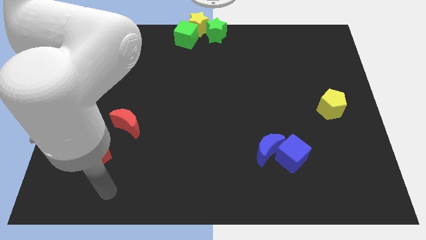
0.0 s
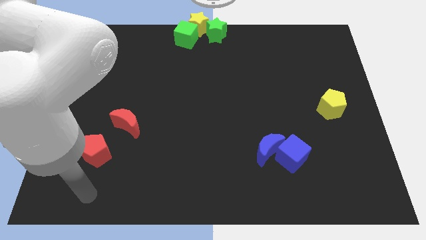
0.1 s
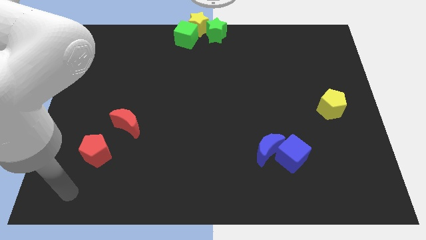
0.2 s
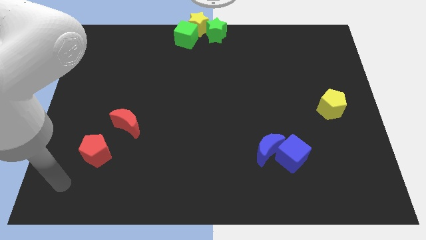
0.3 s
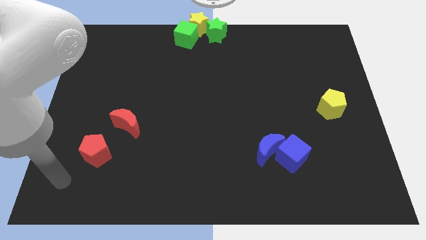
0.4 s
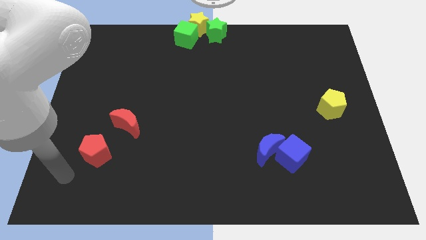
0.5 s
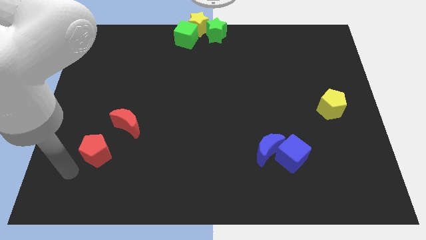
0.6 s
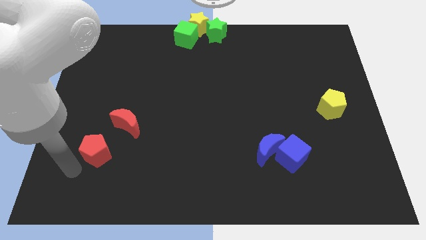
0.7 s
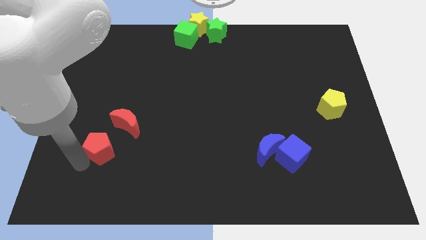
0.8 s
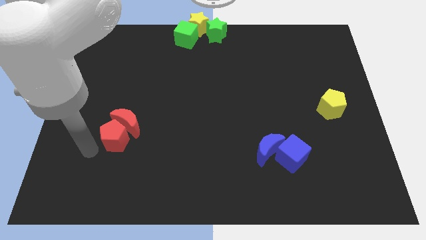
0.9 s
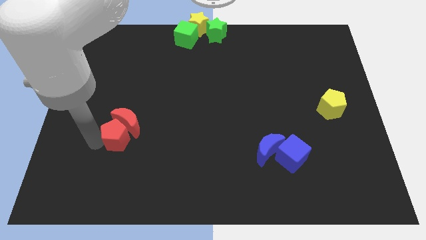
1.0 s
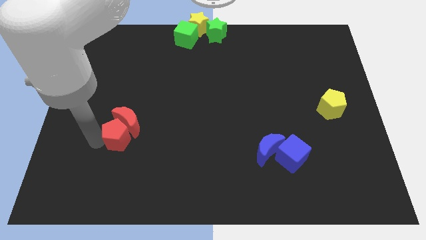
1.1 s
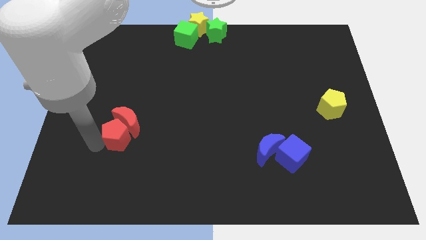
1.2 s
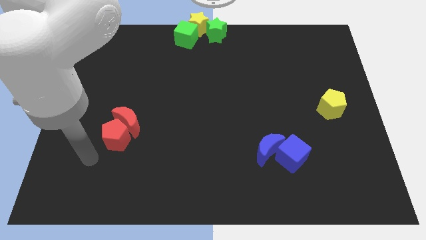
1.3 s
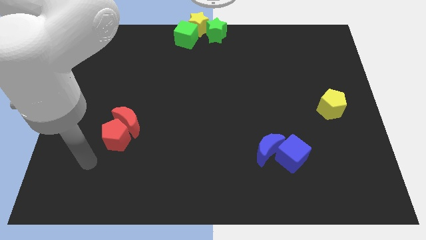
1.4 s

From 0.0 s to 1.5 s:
push the red pentagon into the red moon

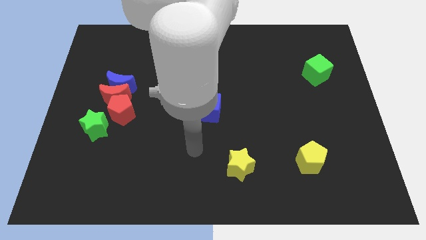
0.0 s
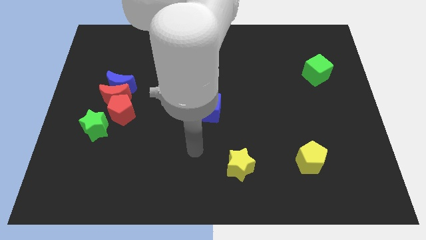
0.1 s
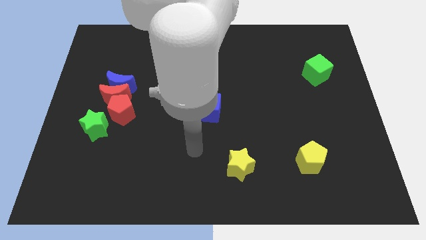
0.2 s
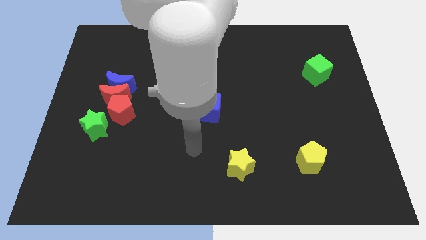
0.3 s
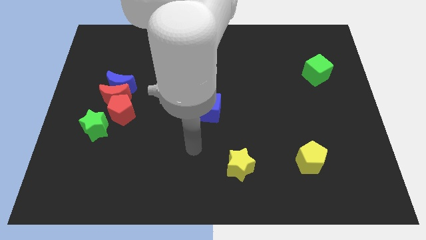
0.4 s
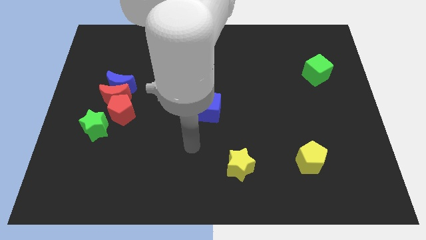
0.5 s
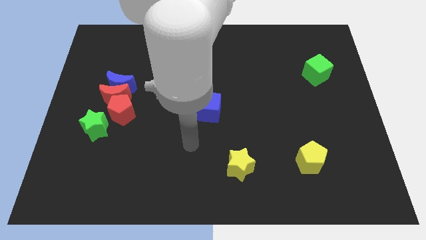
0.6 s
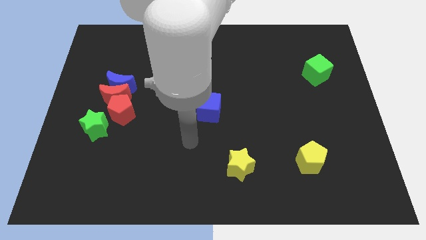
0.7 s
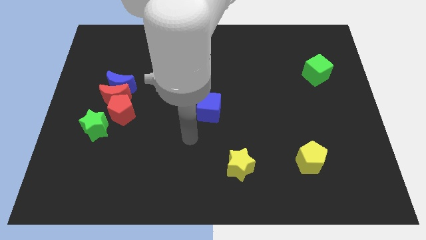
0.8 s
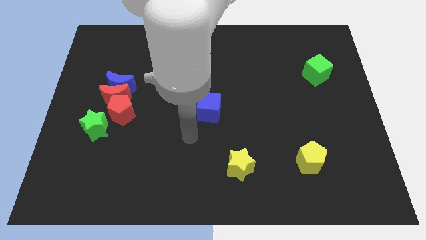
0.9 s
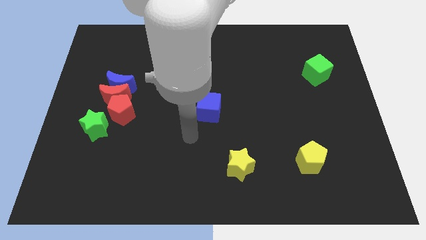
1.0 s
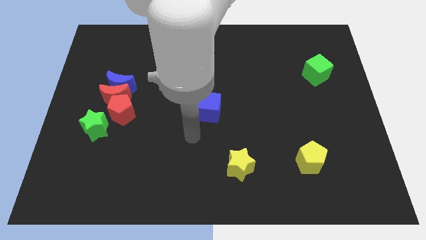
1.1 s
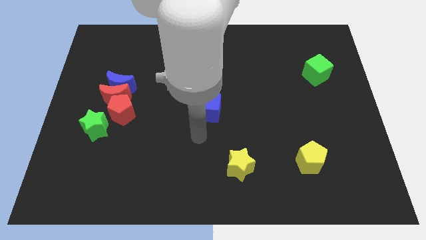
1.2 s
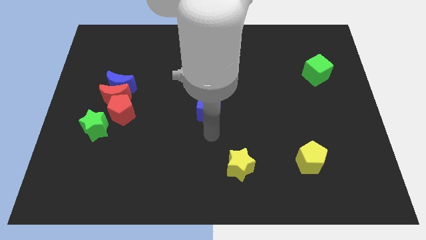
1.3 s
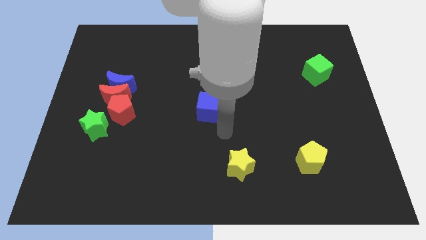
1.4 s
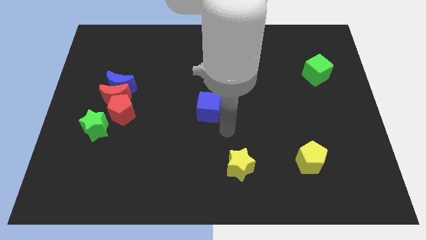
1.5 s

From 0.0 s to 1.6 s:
move arm to the center of the board

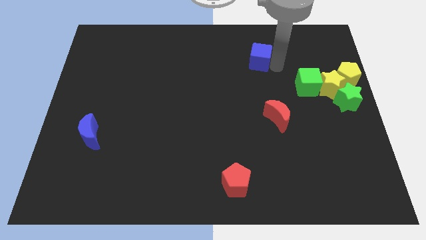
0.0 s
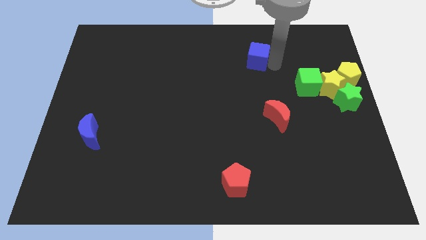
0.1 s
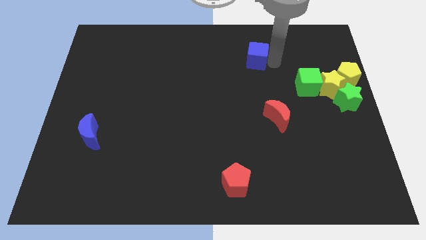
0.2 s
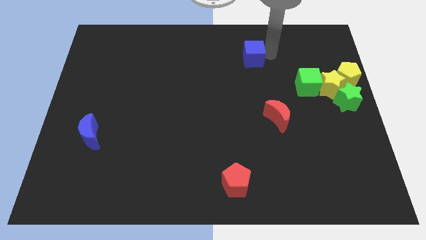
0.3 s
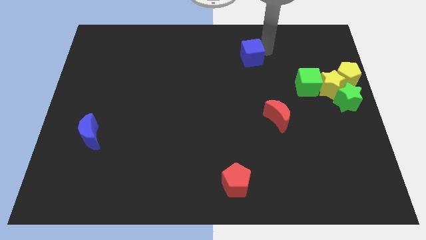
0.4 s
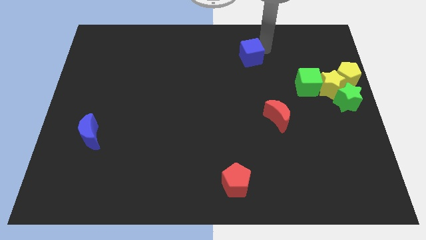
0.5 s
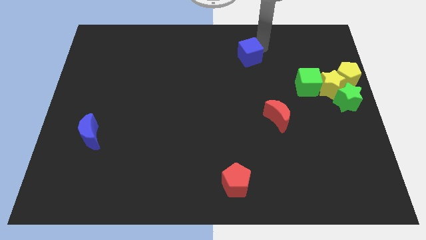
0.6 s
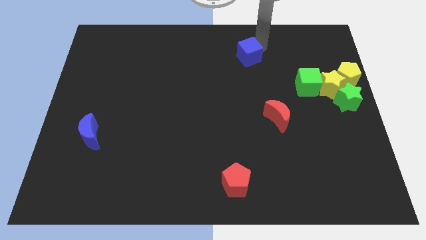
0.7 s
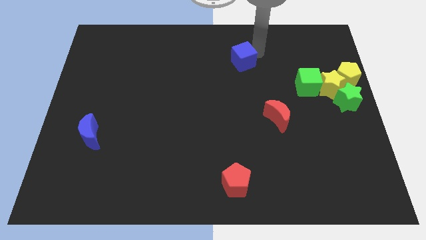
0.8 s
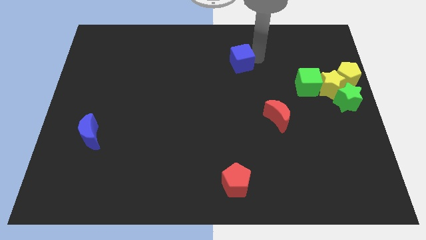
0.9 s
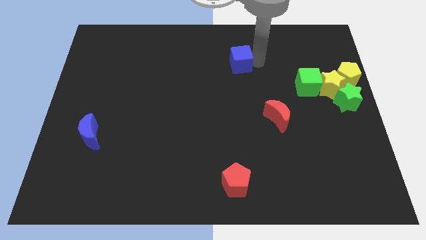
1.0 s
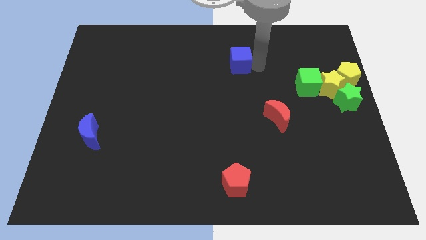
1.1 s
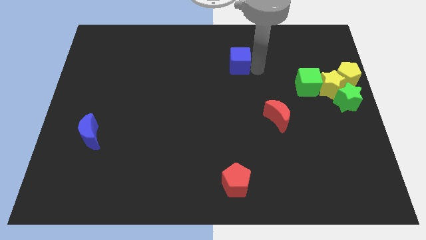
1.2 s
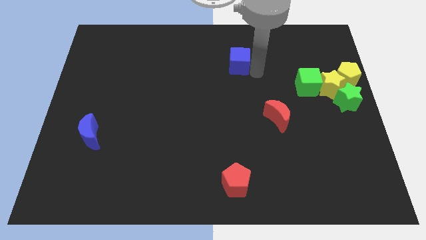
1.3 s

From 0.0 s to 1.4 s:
slide the blue cube diagonally on the top left side of the red crescent

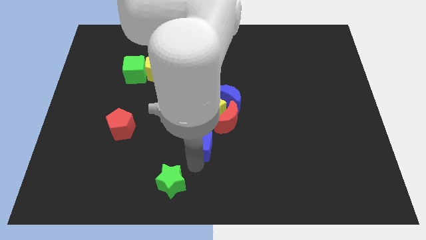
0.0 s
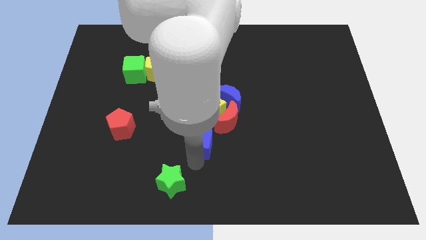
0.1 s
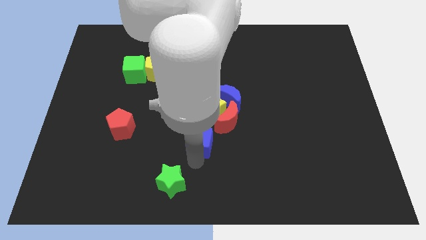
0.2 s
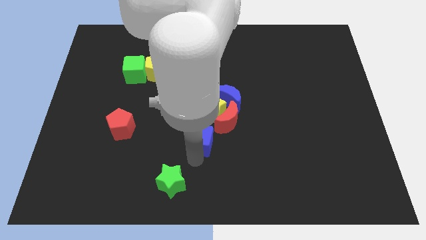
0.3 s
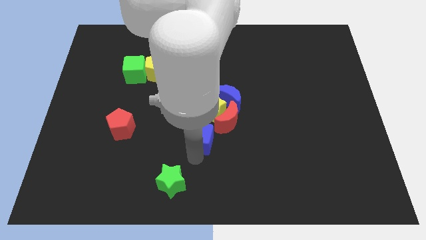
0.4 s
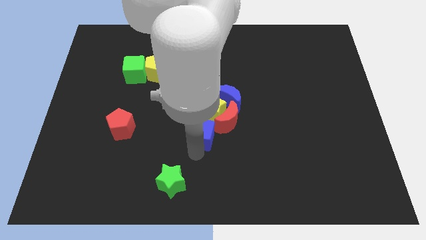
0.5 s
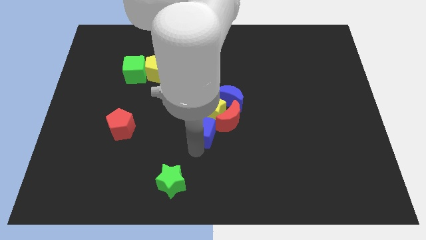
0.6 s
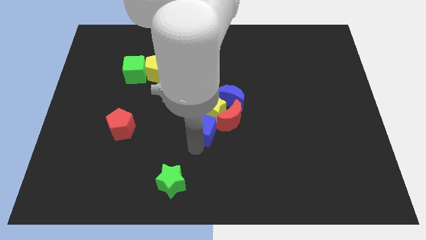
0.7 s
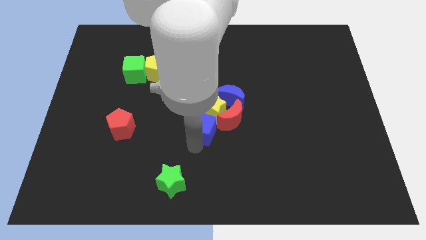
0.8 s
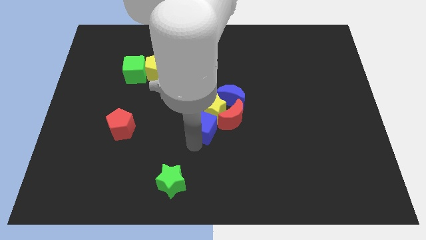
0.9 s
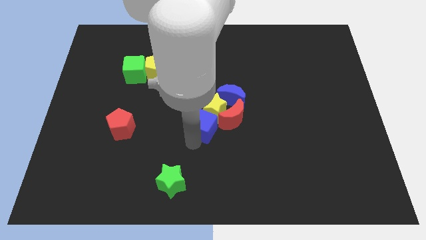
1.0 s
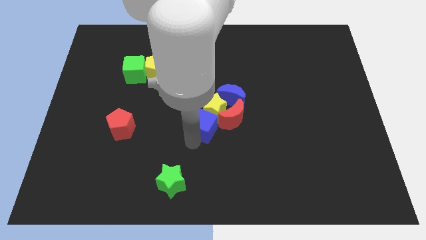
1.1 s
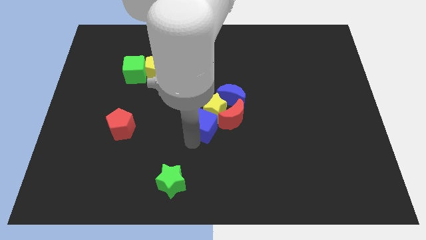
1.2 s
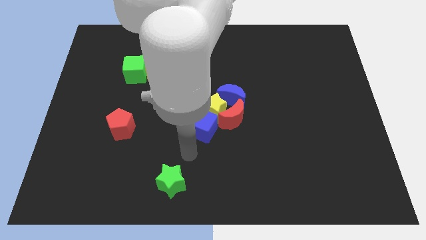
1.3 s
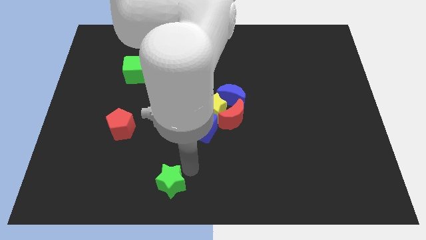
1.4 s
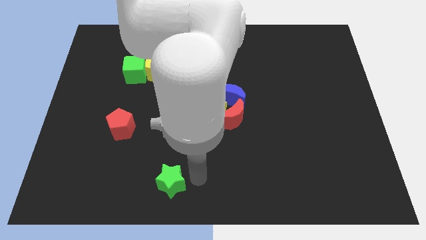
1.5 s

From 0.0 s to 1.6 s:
move the blue cube into a group of blocks

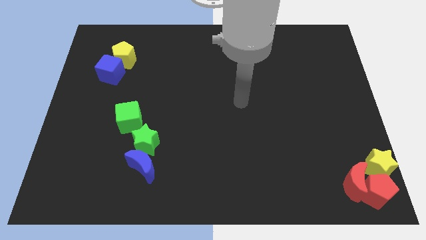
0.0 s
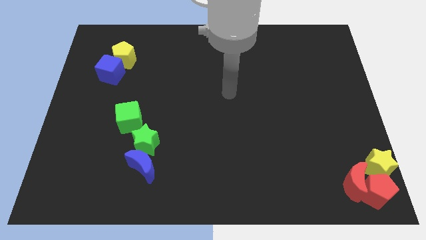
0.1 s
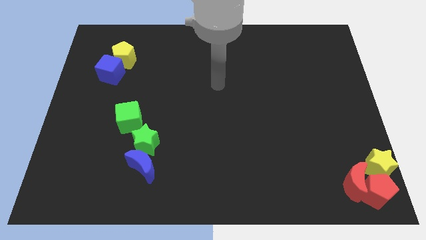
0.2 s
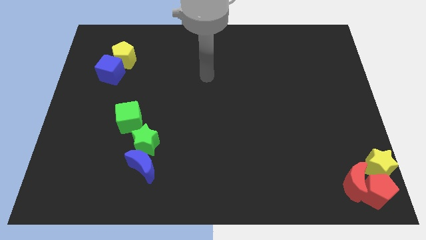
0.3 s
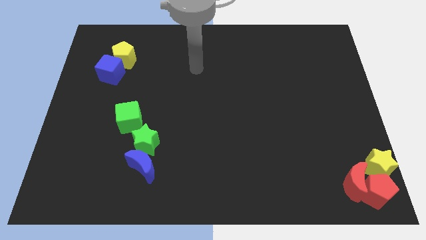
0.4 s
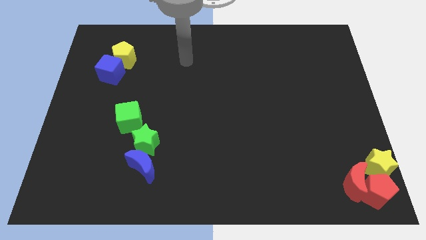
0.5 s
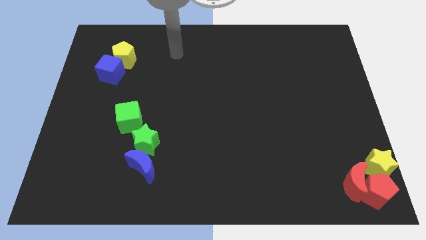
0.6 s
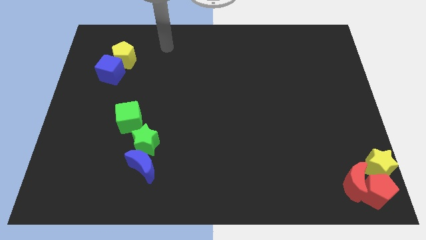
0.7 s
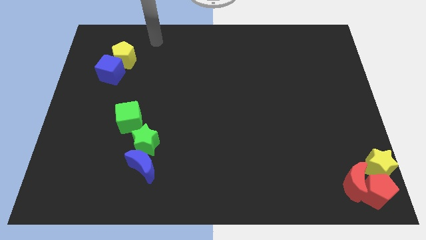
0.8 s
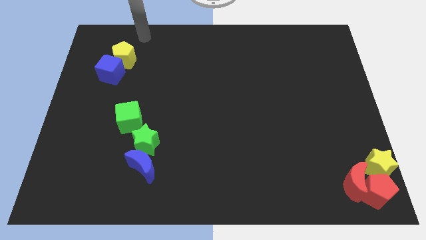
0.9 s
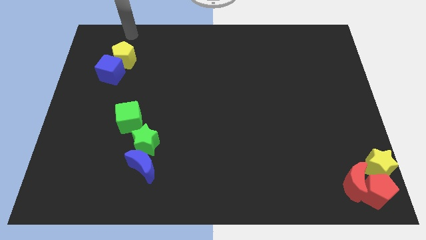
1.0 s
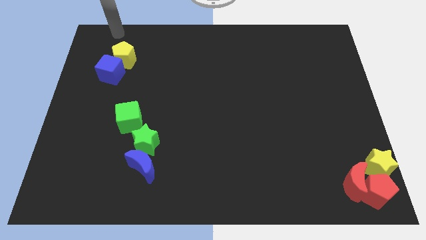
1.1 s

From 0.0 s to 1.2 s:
place your arm to the top of yellow pentagon

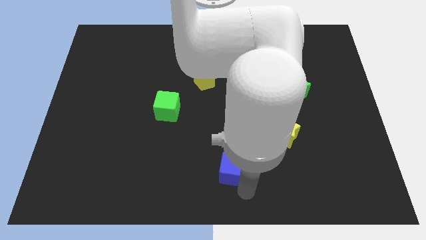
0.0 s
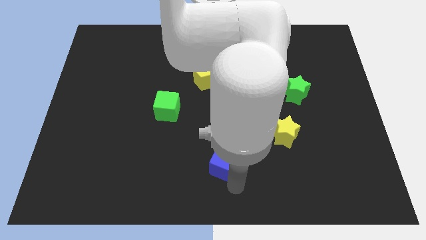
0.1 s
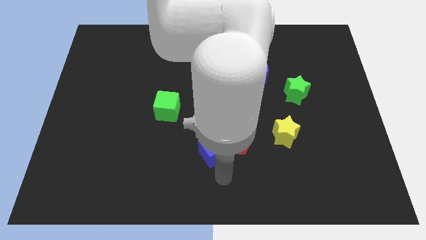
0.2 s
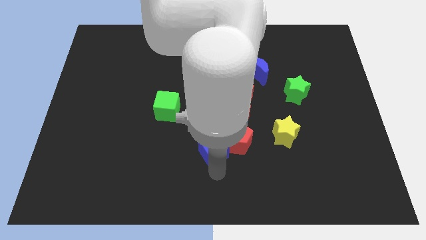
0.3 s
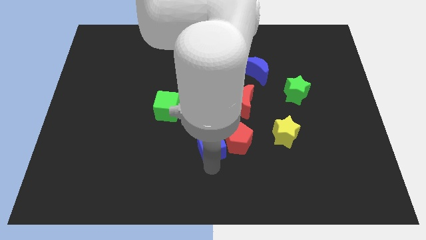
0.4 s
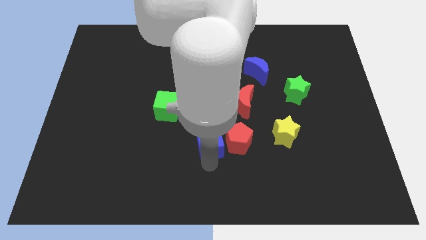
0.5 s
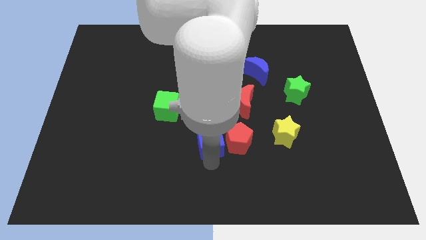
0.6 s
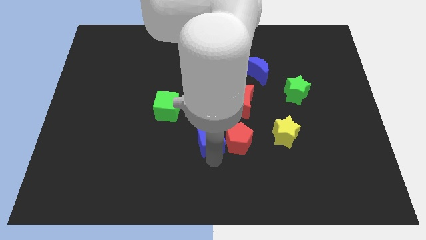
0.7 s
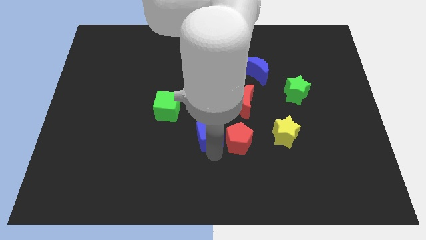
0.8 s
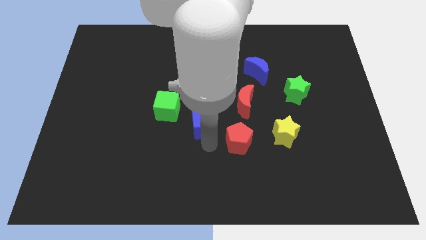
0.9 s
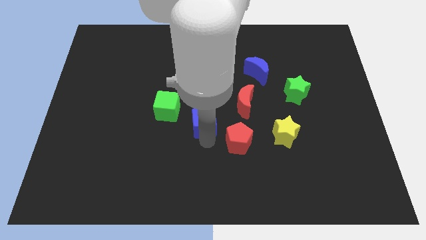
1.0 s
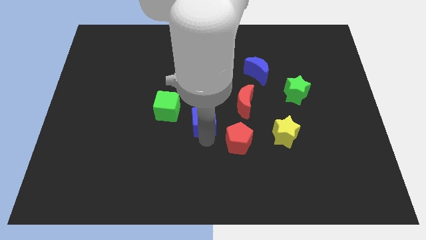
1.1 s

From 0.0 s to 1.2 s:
place the blue cube in between the green cube and the red pentagon

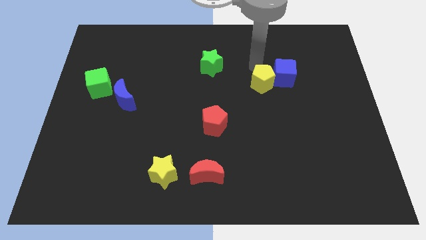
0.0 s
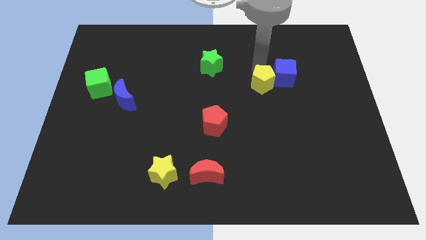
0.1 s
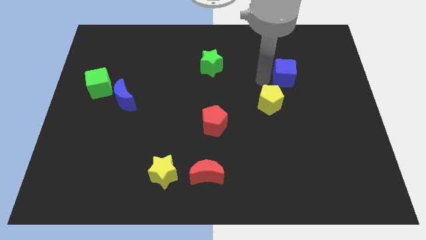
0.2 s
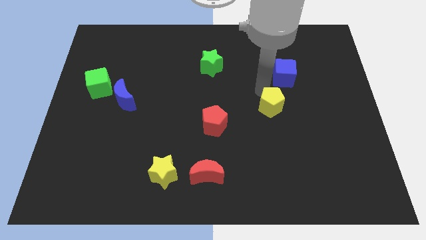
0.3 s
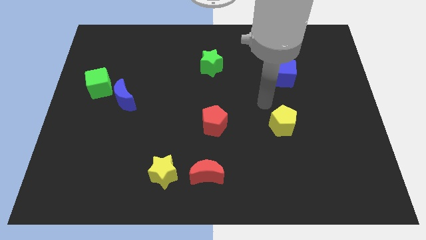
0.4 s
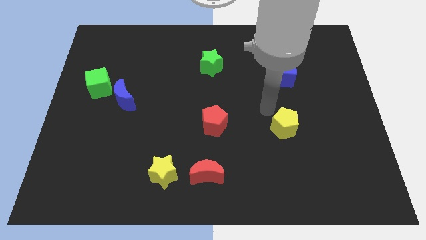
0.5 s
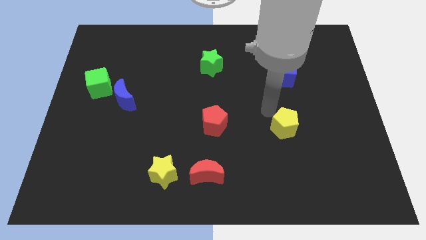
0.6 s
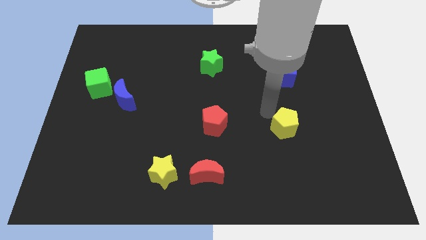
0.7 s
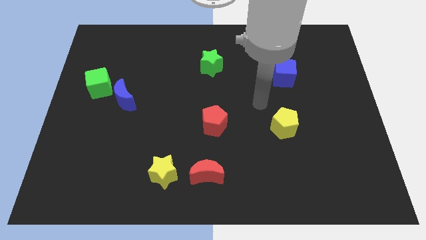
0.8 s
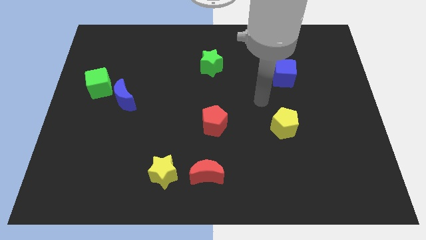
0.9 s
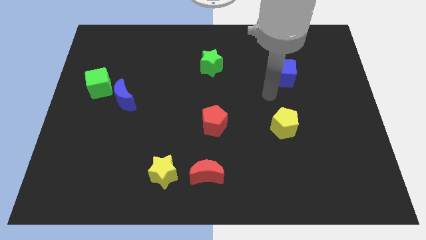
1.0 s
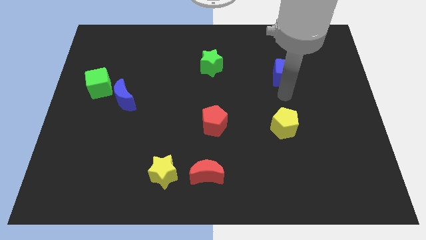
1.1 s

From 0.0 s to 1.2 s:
move the yellow pentagon away from the blue cube
